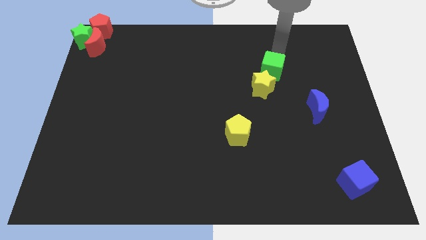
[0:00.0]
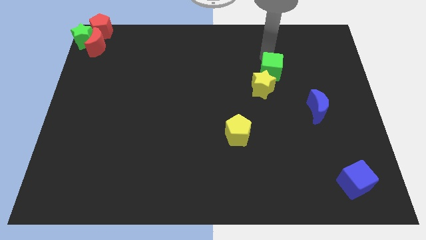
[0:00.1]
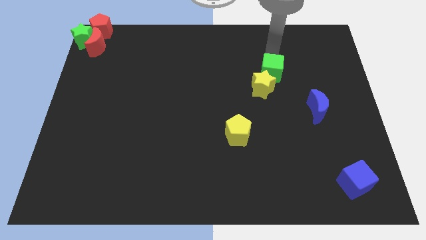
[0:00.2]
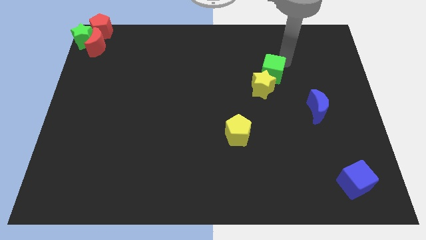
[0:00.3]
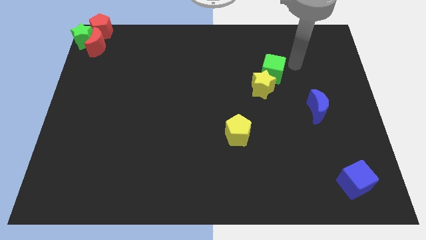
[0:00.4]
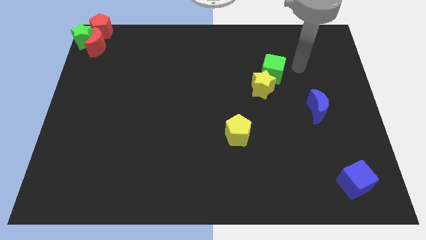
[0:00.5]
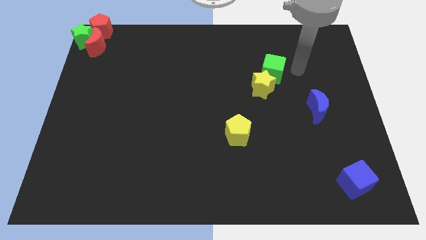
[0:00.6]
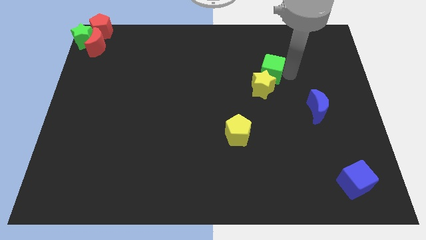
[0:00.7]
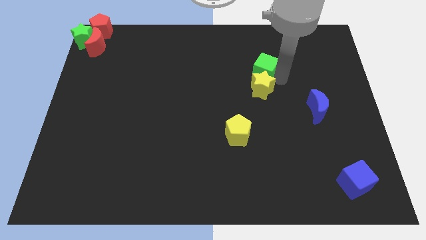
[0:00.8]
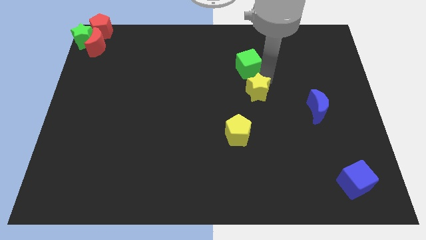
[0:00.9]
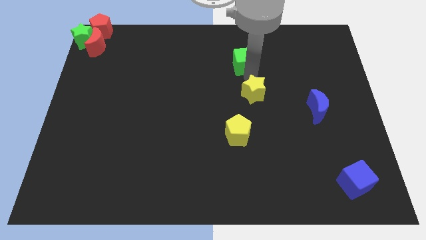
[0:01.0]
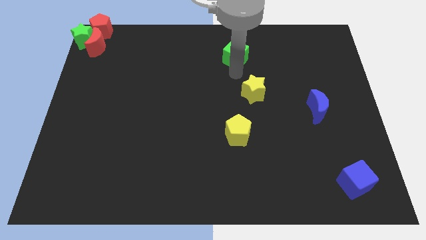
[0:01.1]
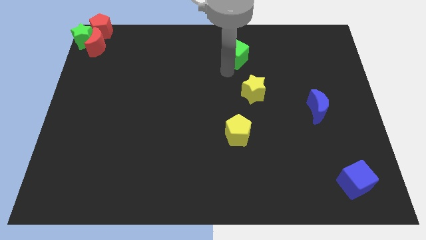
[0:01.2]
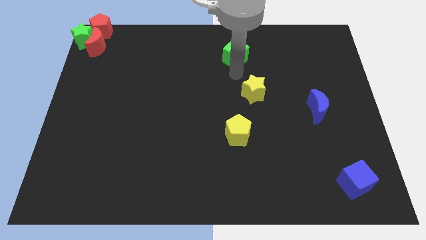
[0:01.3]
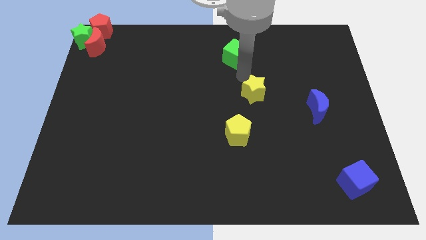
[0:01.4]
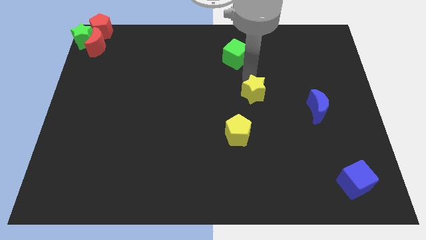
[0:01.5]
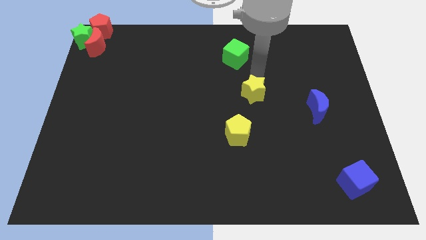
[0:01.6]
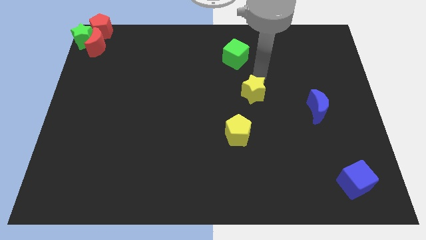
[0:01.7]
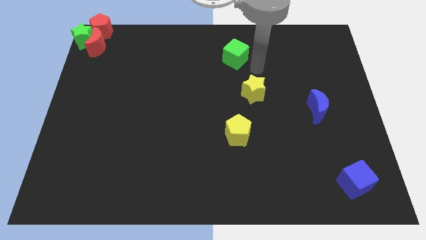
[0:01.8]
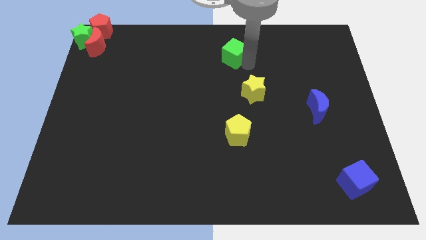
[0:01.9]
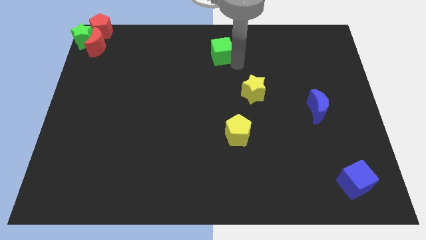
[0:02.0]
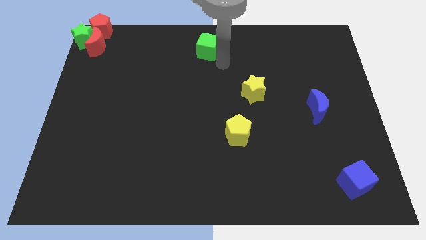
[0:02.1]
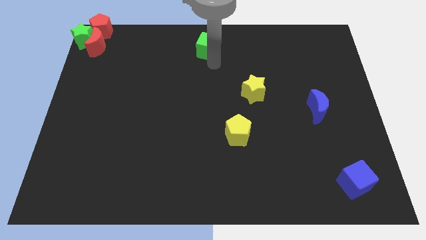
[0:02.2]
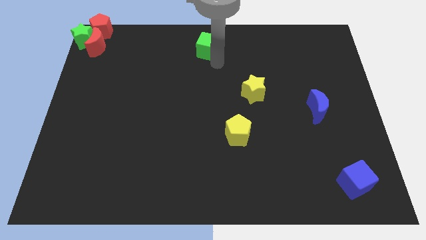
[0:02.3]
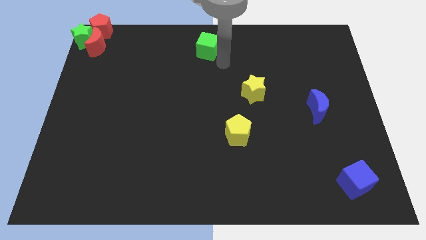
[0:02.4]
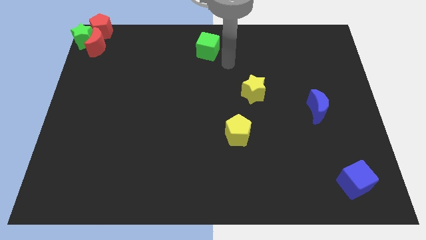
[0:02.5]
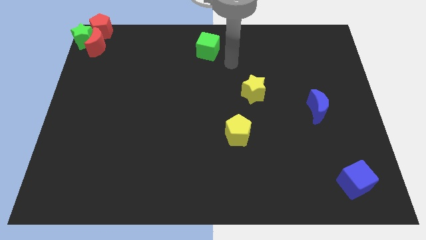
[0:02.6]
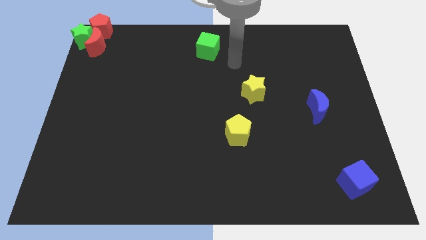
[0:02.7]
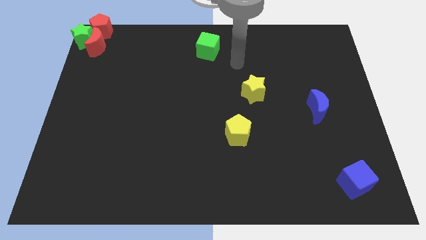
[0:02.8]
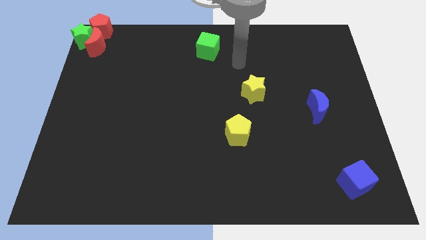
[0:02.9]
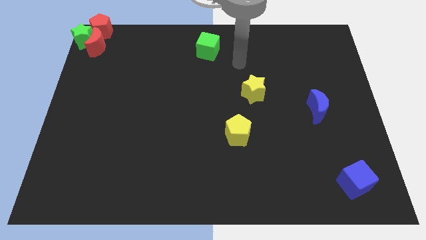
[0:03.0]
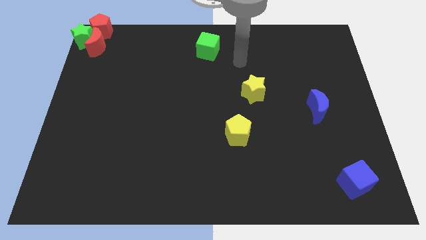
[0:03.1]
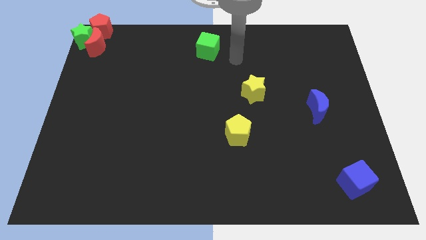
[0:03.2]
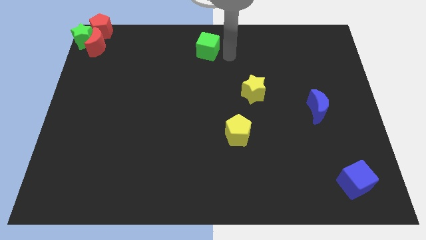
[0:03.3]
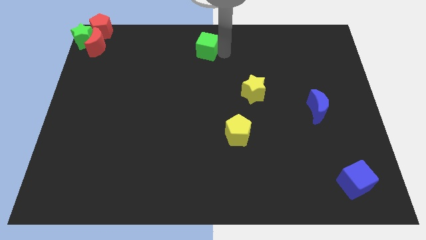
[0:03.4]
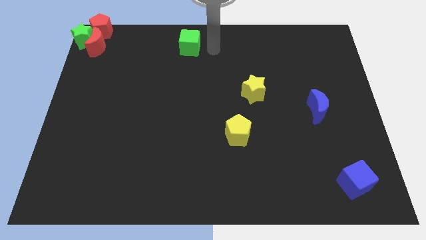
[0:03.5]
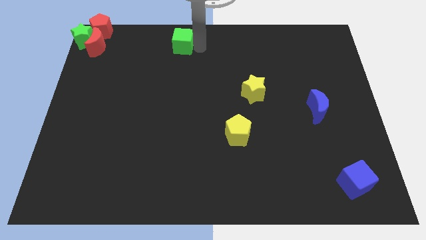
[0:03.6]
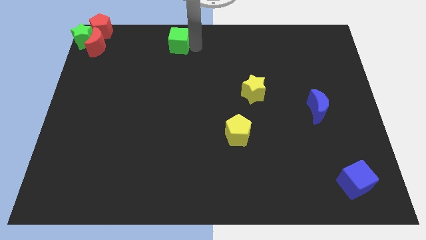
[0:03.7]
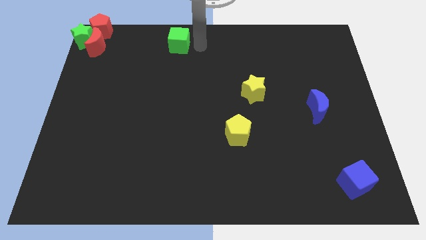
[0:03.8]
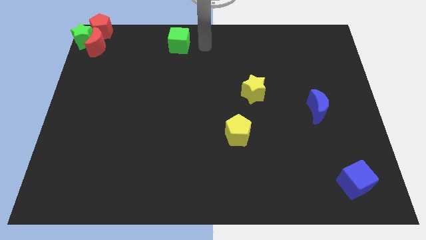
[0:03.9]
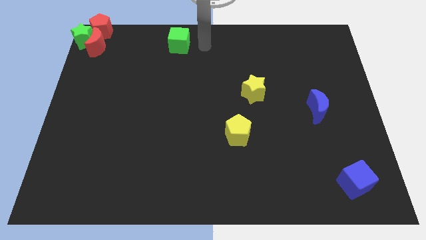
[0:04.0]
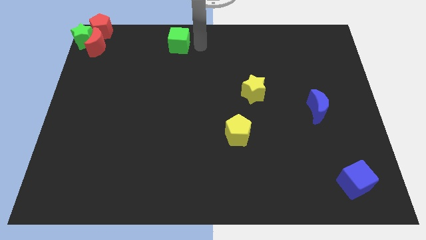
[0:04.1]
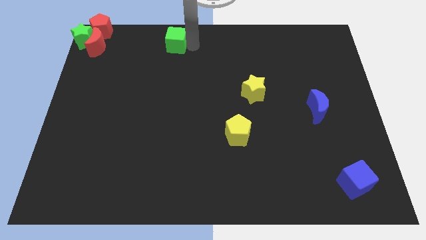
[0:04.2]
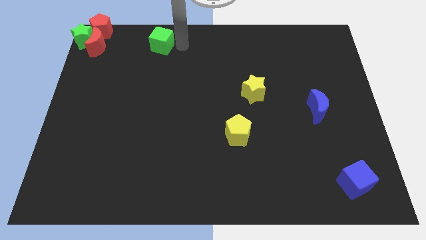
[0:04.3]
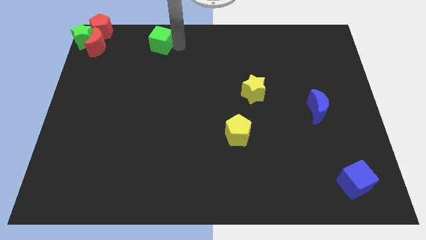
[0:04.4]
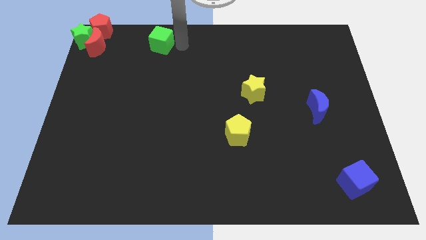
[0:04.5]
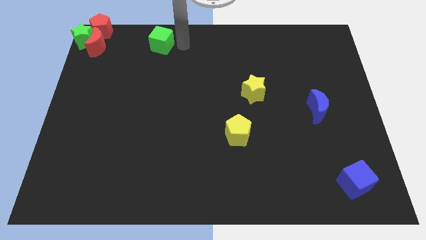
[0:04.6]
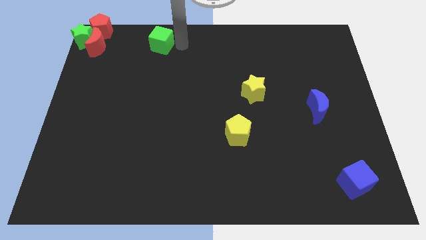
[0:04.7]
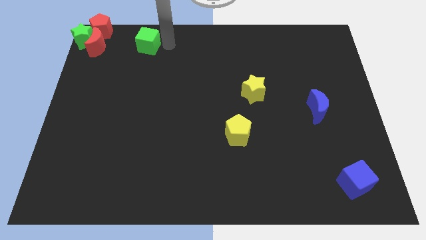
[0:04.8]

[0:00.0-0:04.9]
move the green cube to the top left

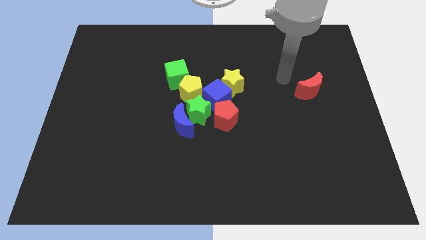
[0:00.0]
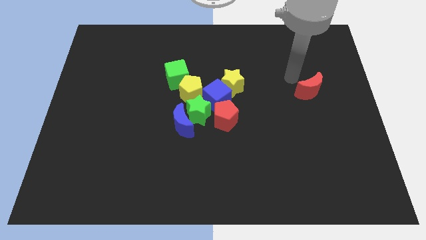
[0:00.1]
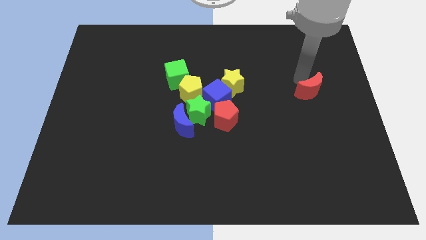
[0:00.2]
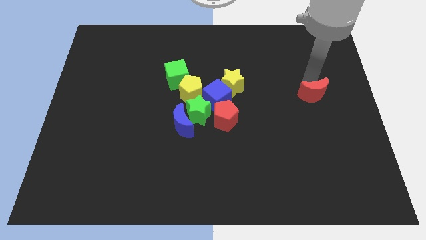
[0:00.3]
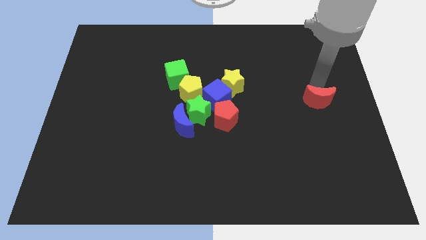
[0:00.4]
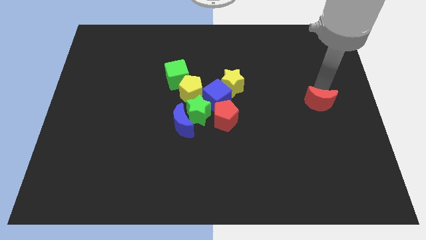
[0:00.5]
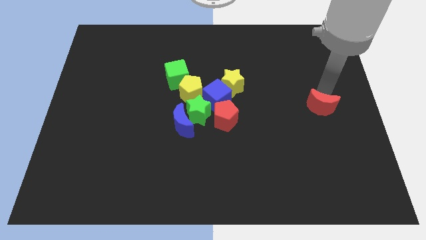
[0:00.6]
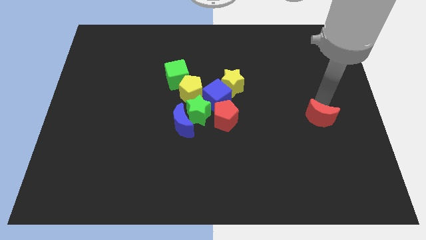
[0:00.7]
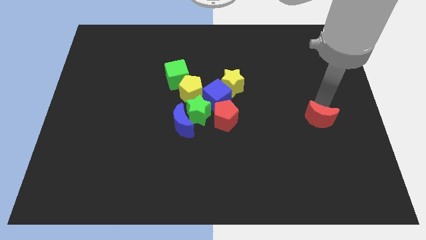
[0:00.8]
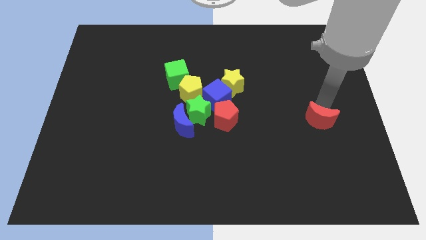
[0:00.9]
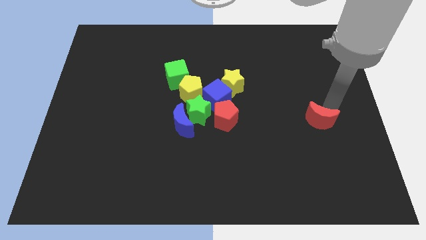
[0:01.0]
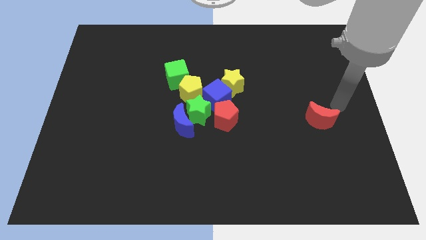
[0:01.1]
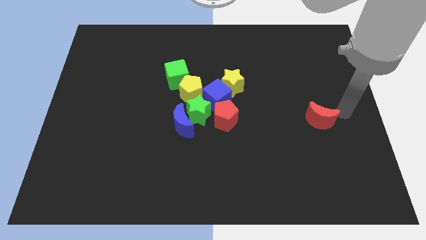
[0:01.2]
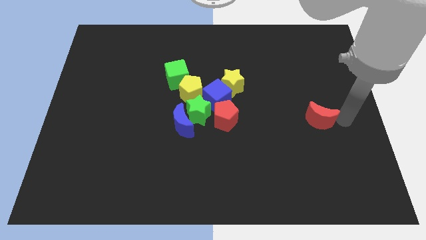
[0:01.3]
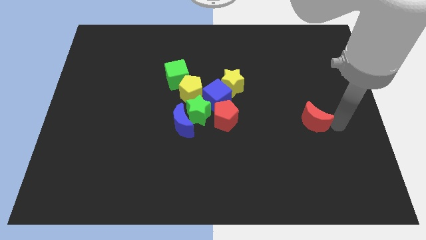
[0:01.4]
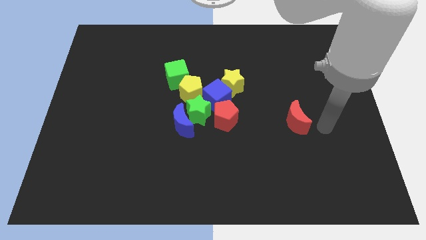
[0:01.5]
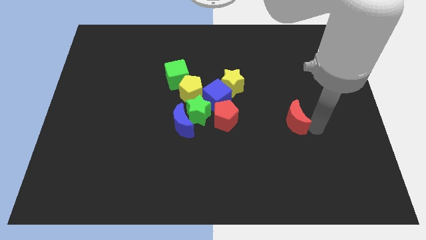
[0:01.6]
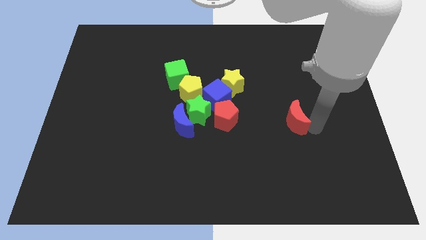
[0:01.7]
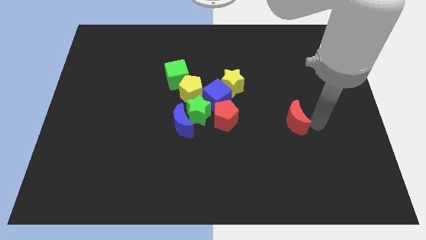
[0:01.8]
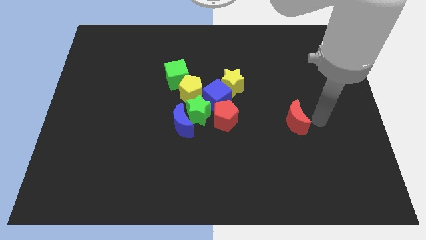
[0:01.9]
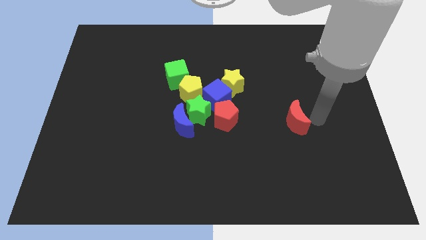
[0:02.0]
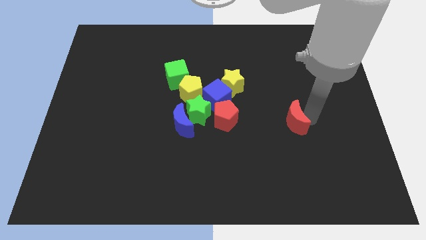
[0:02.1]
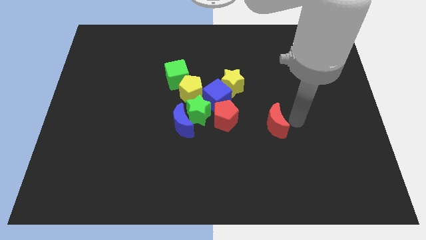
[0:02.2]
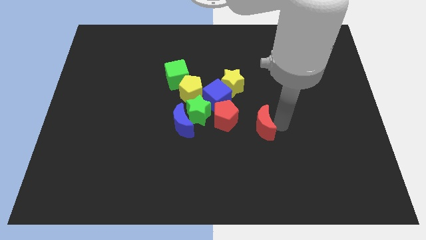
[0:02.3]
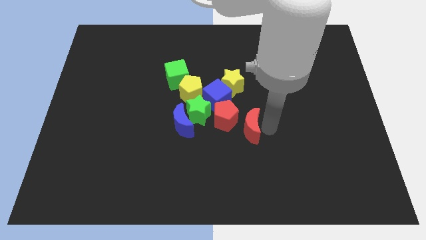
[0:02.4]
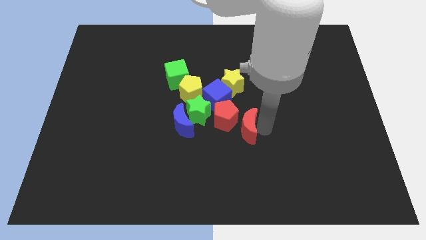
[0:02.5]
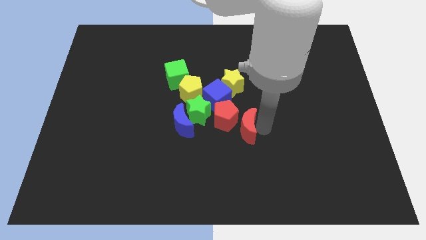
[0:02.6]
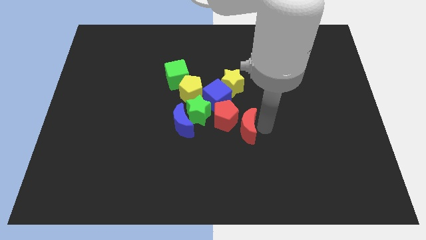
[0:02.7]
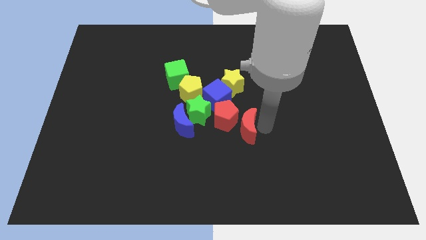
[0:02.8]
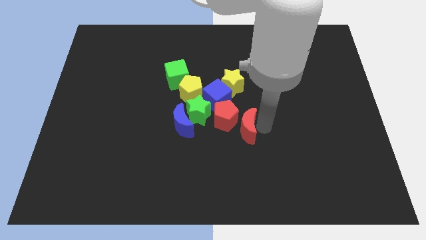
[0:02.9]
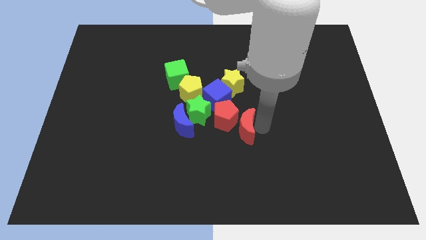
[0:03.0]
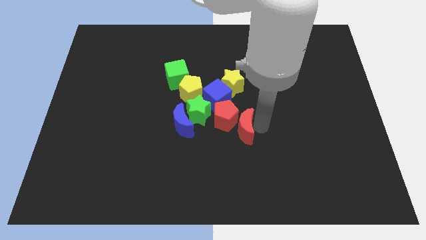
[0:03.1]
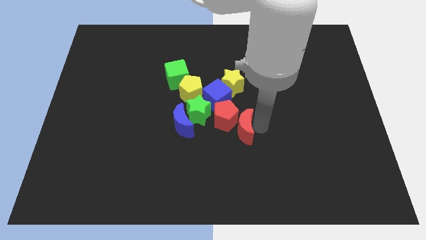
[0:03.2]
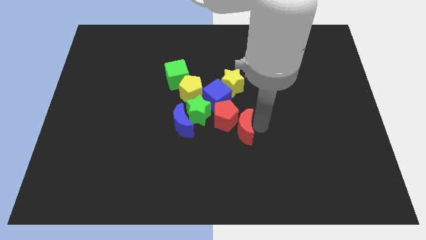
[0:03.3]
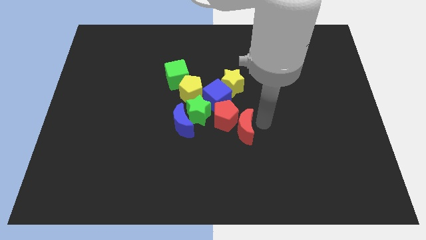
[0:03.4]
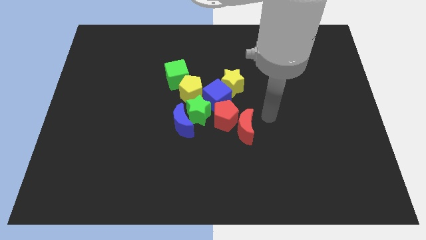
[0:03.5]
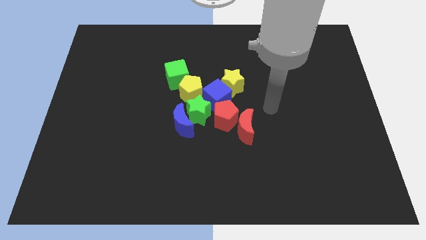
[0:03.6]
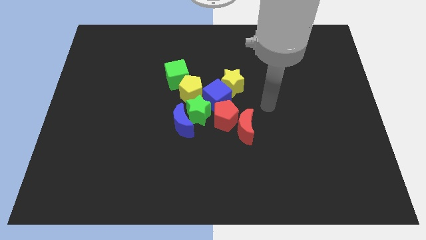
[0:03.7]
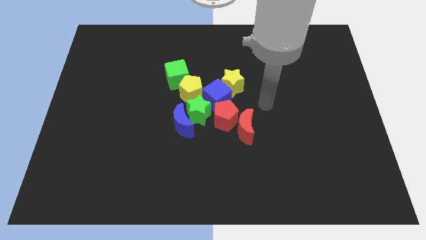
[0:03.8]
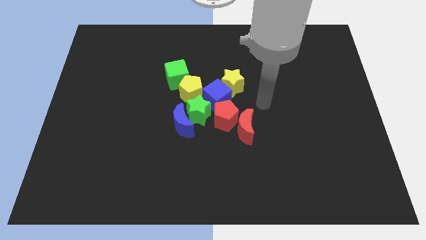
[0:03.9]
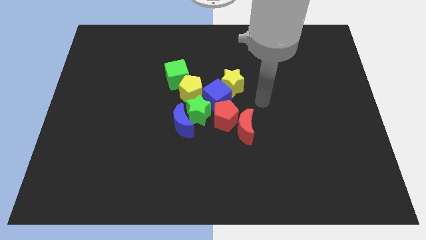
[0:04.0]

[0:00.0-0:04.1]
move the red crescent towards the red pentagon
